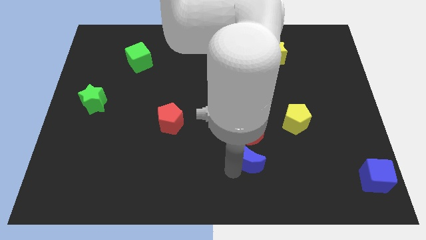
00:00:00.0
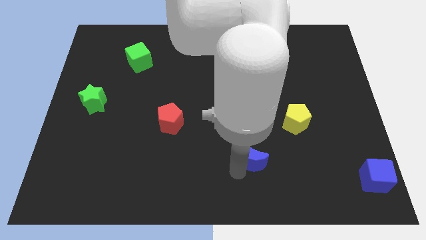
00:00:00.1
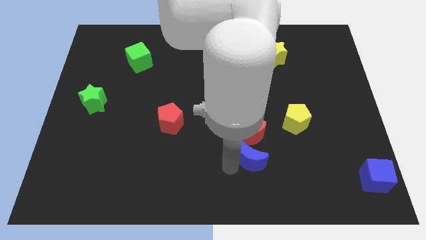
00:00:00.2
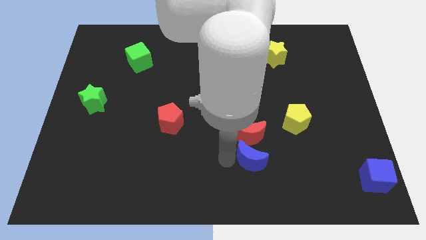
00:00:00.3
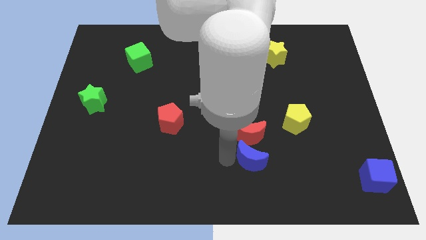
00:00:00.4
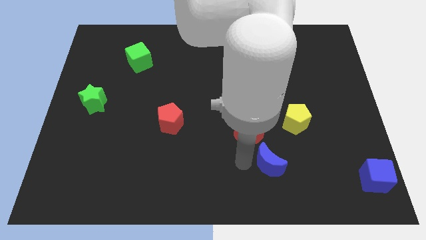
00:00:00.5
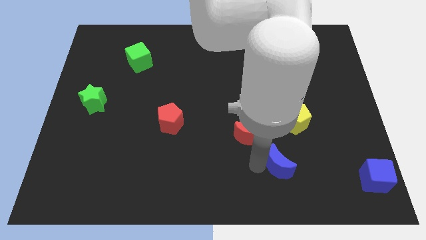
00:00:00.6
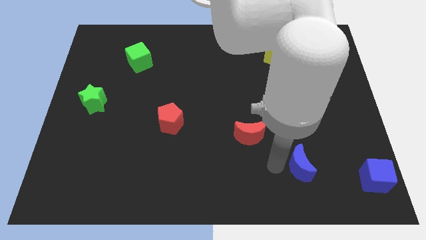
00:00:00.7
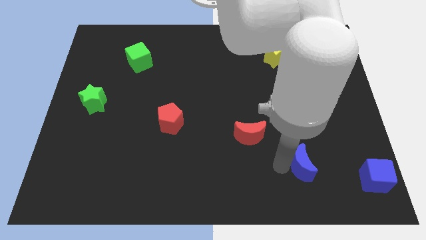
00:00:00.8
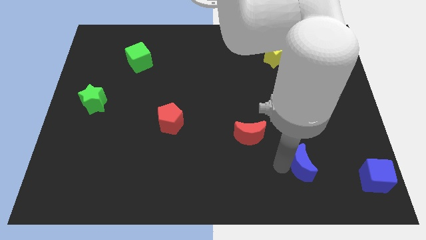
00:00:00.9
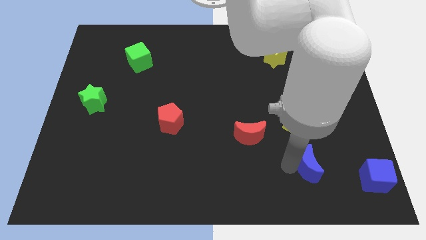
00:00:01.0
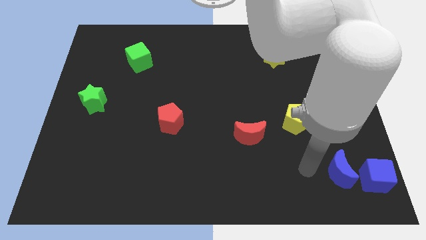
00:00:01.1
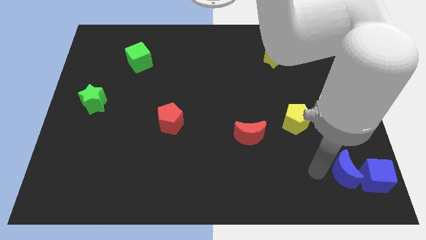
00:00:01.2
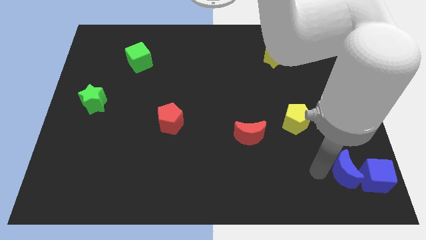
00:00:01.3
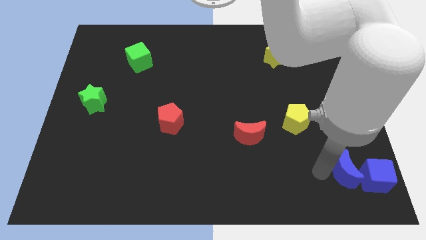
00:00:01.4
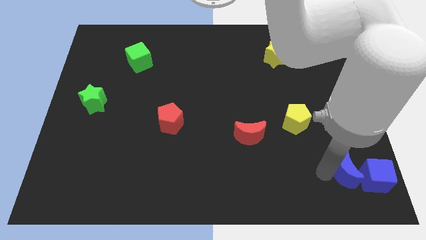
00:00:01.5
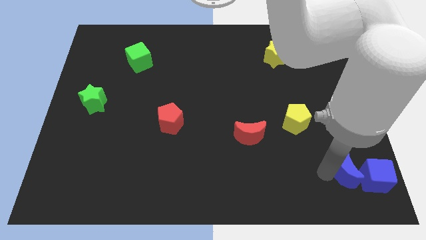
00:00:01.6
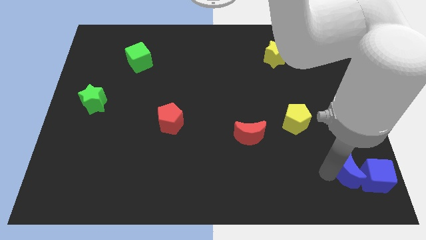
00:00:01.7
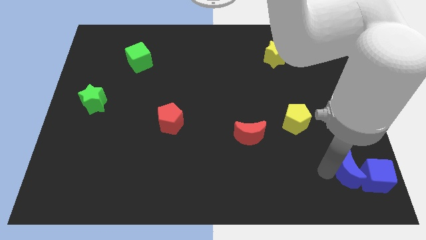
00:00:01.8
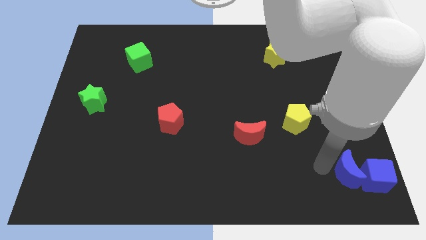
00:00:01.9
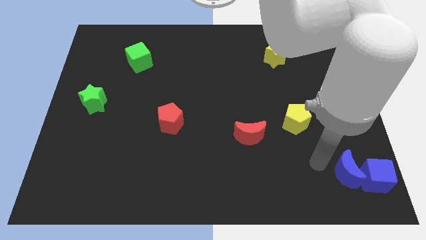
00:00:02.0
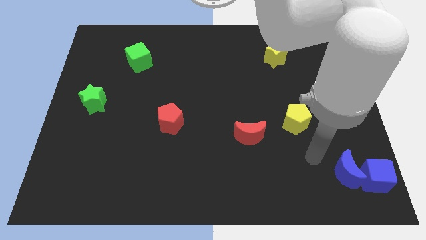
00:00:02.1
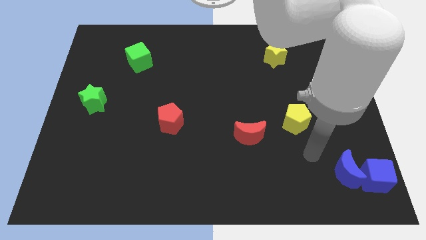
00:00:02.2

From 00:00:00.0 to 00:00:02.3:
move the blue moon to the left of the blue cube

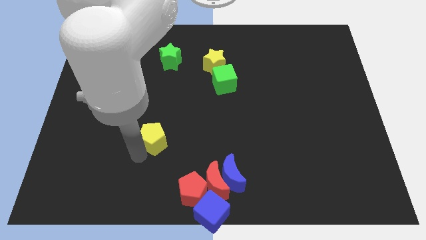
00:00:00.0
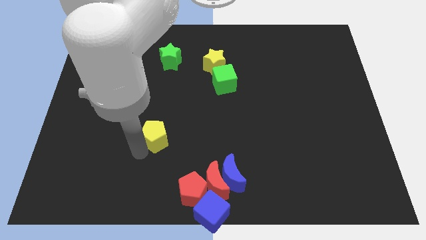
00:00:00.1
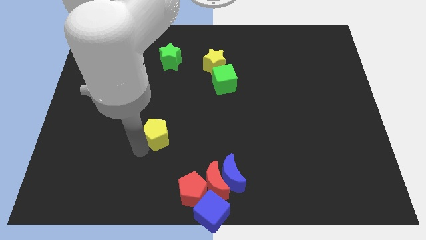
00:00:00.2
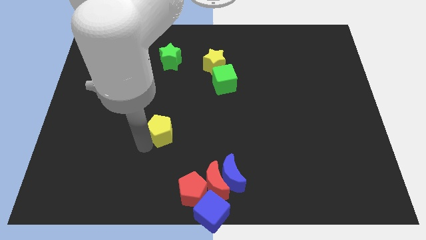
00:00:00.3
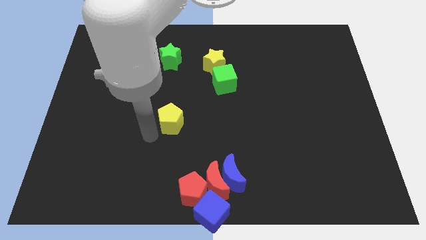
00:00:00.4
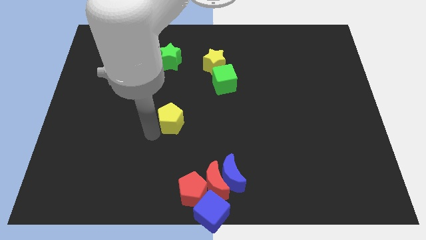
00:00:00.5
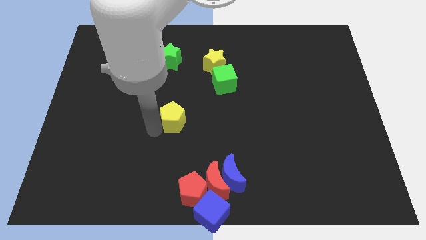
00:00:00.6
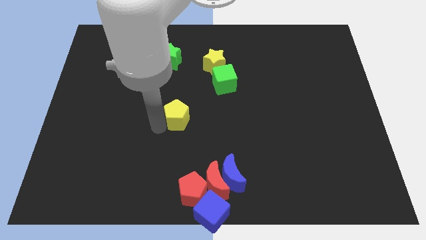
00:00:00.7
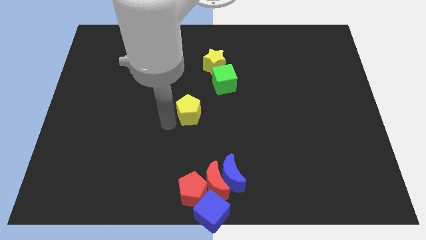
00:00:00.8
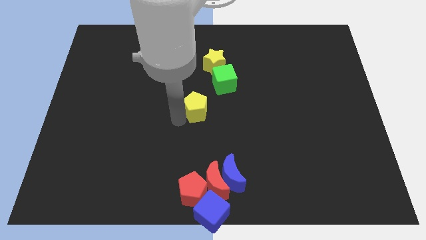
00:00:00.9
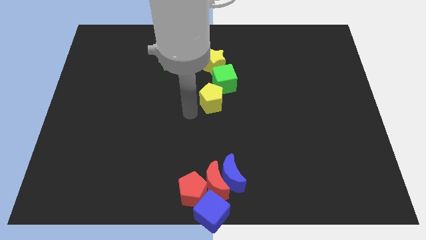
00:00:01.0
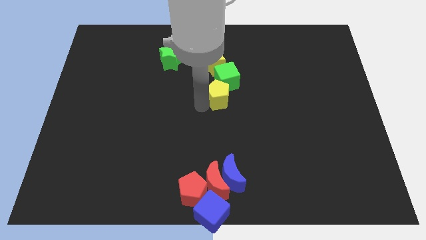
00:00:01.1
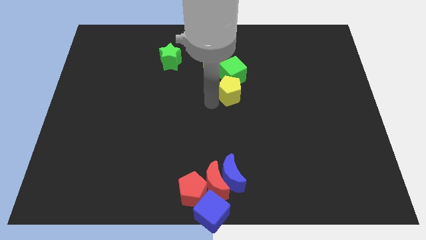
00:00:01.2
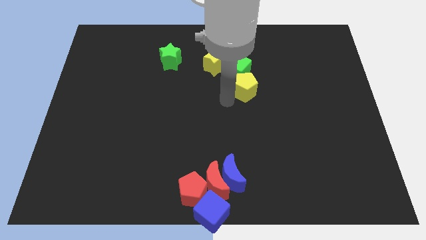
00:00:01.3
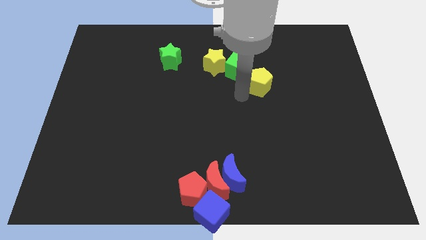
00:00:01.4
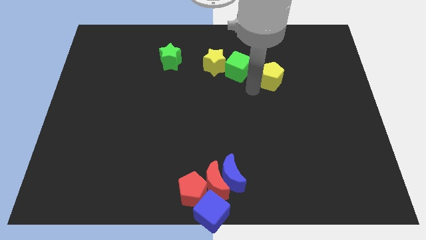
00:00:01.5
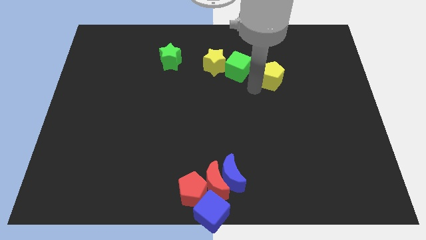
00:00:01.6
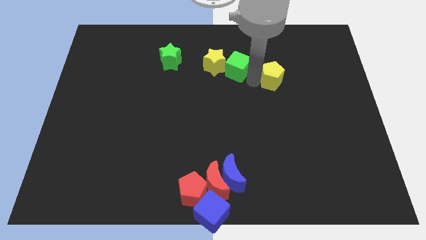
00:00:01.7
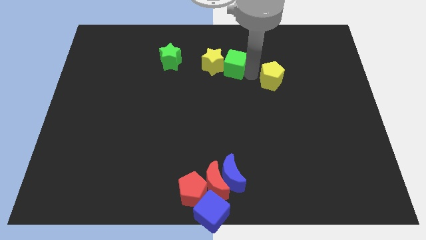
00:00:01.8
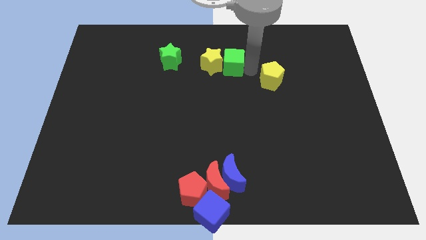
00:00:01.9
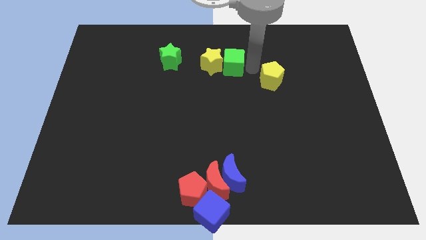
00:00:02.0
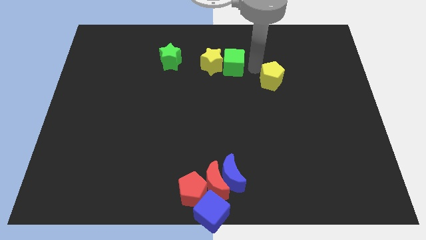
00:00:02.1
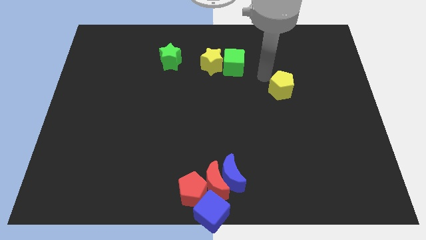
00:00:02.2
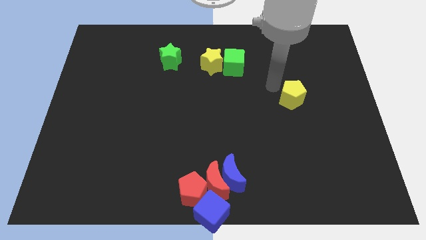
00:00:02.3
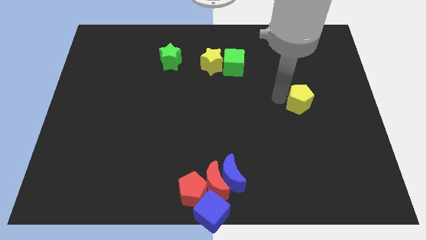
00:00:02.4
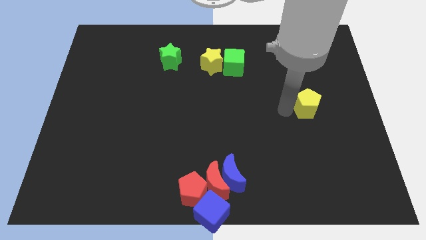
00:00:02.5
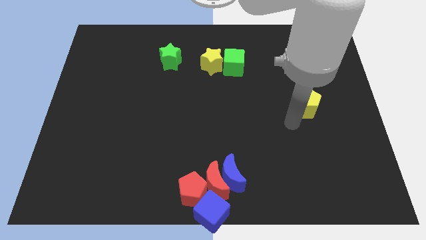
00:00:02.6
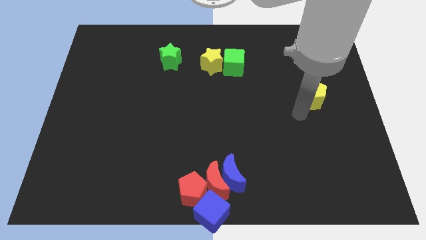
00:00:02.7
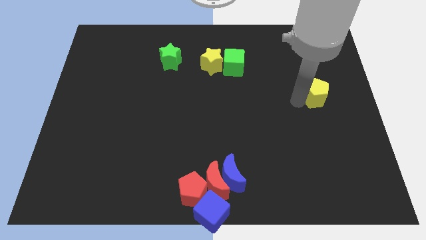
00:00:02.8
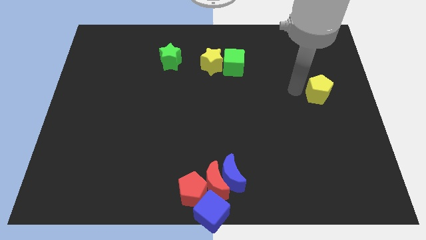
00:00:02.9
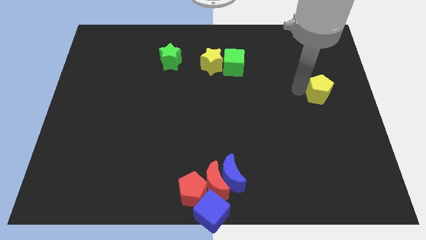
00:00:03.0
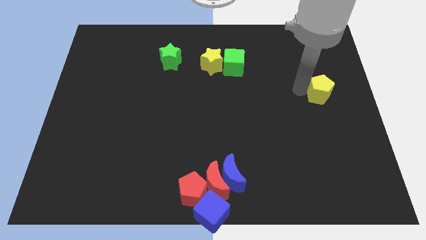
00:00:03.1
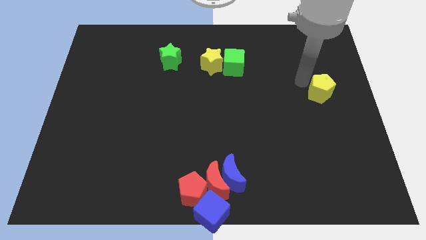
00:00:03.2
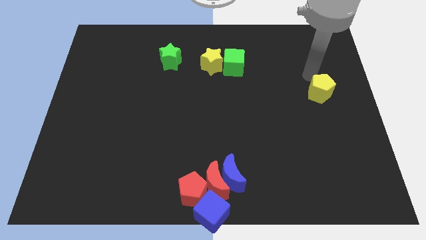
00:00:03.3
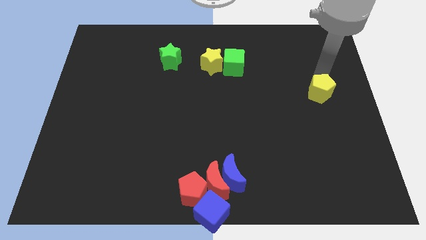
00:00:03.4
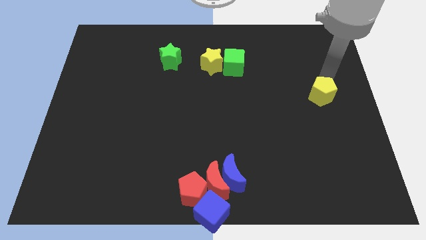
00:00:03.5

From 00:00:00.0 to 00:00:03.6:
move the yellow pentagon towards the center right

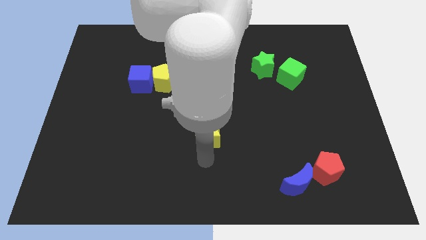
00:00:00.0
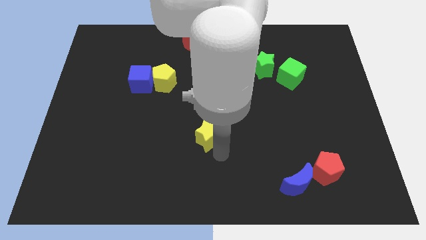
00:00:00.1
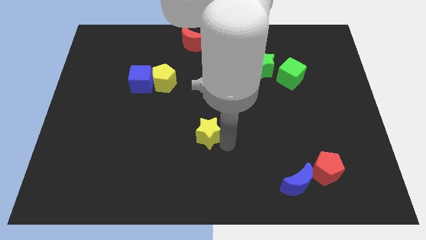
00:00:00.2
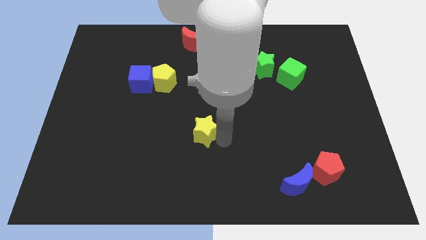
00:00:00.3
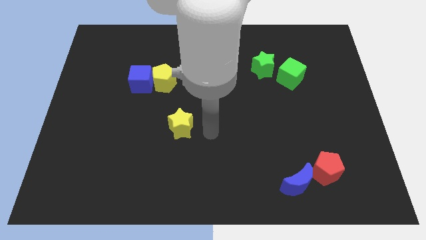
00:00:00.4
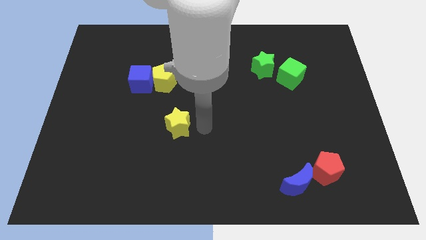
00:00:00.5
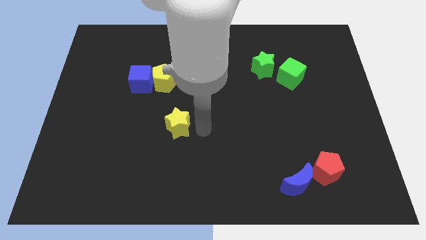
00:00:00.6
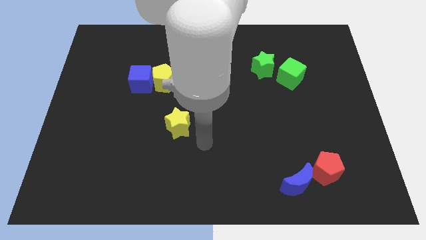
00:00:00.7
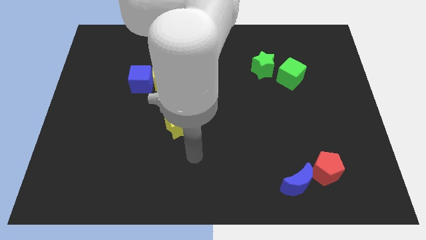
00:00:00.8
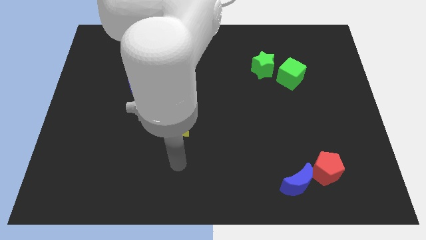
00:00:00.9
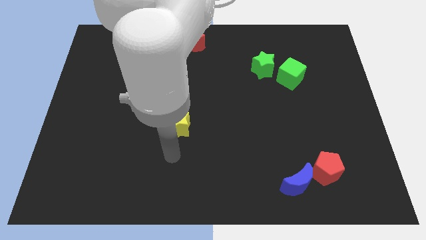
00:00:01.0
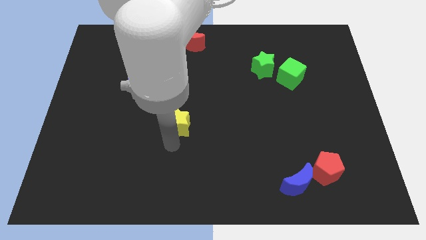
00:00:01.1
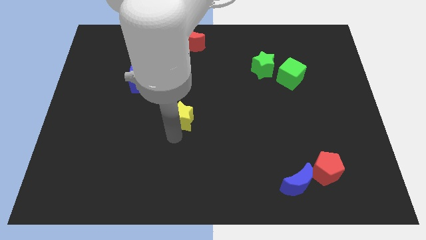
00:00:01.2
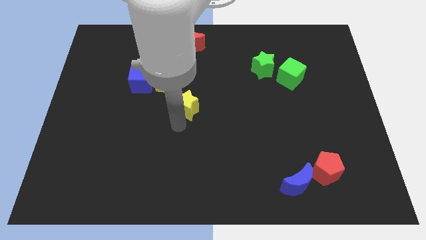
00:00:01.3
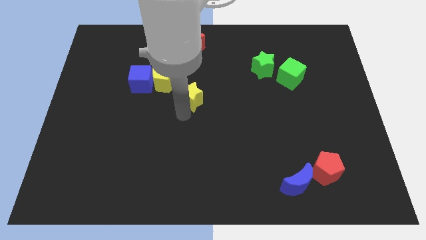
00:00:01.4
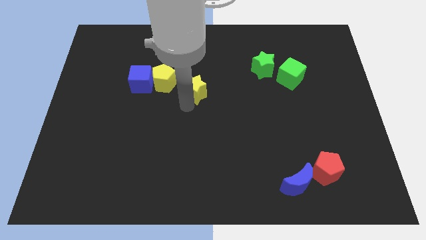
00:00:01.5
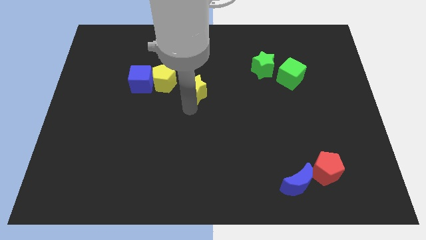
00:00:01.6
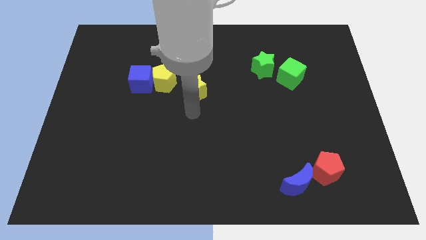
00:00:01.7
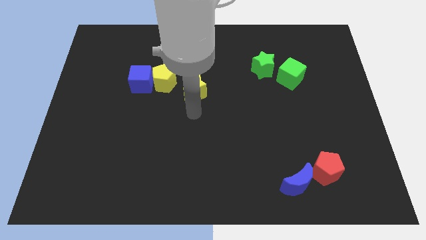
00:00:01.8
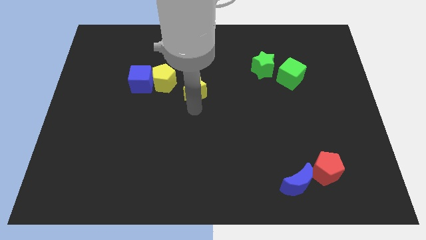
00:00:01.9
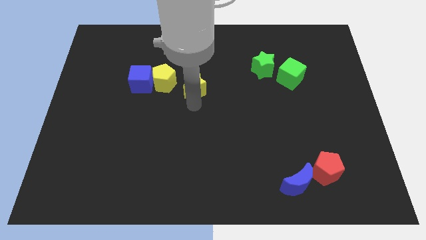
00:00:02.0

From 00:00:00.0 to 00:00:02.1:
move the yellow star near to the yellow pentagon

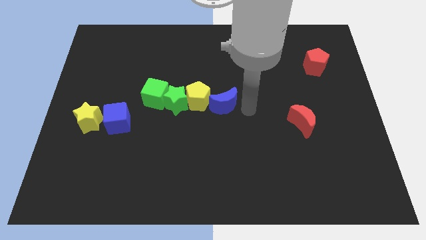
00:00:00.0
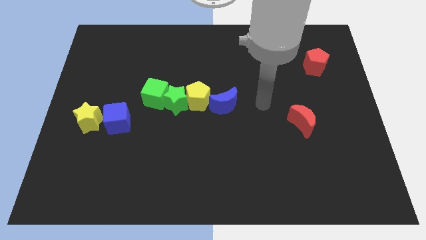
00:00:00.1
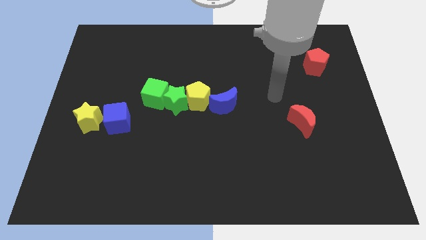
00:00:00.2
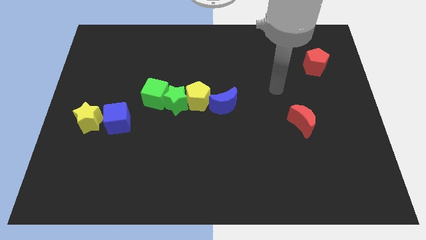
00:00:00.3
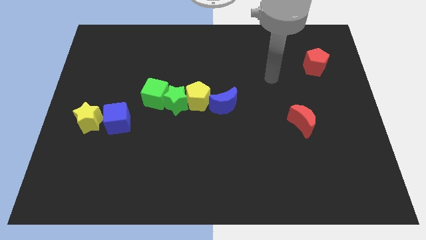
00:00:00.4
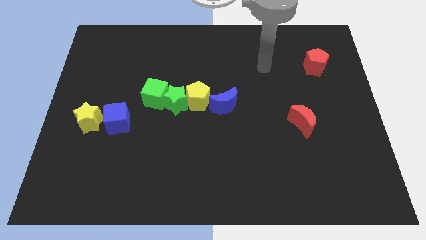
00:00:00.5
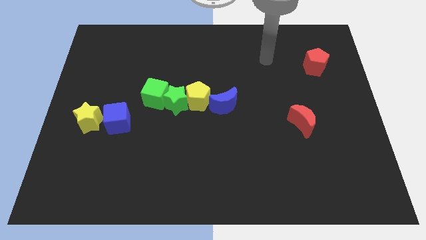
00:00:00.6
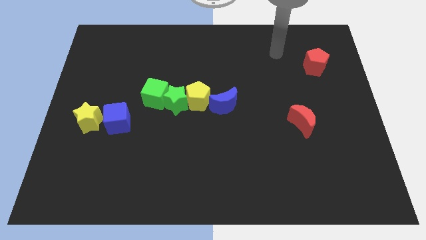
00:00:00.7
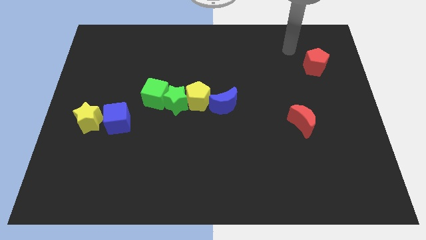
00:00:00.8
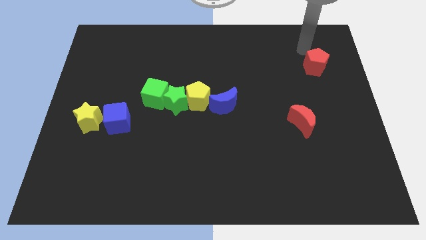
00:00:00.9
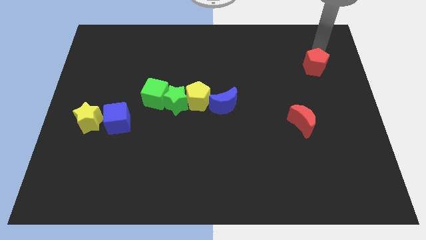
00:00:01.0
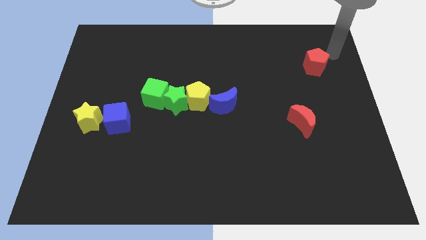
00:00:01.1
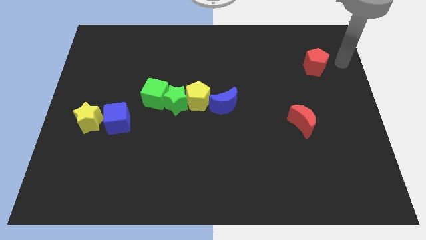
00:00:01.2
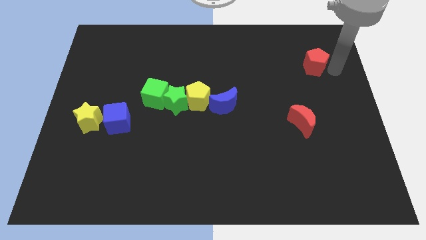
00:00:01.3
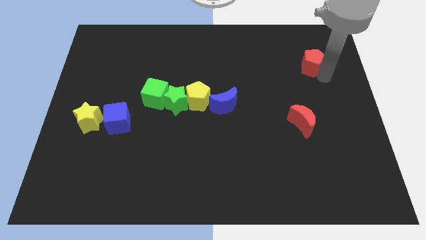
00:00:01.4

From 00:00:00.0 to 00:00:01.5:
tap the red pentagon
